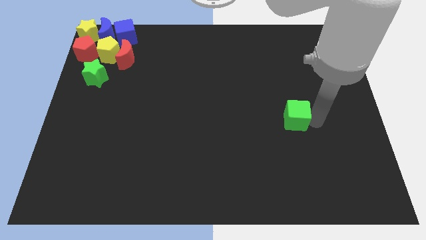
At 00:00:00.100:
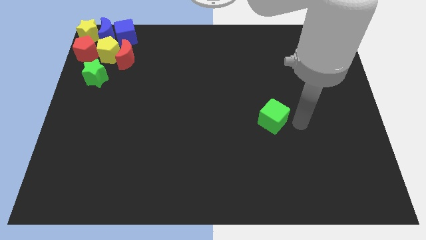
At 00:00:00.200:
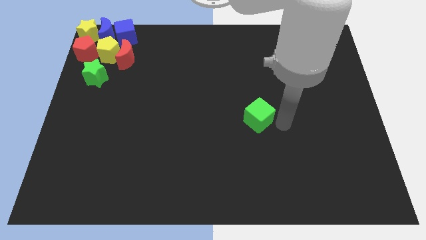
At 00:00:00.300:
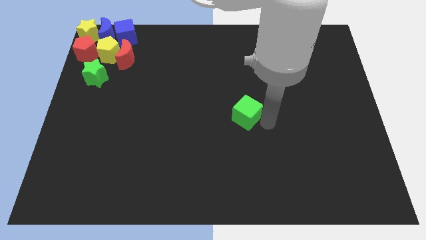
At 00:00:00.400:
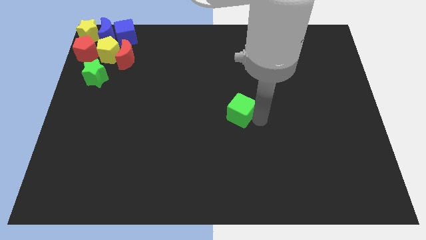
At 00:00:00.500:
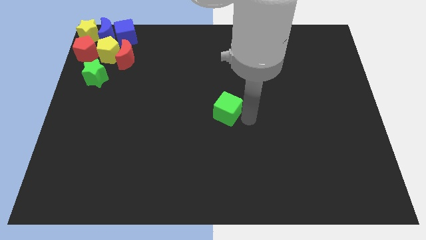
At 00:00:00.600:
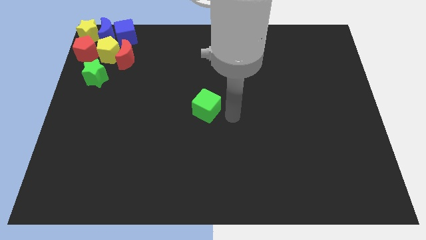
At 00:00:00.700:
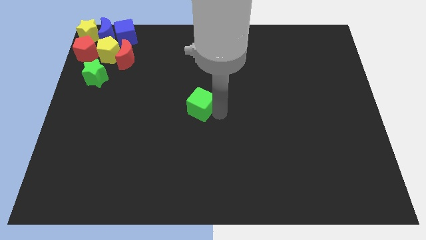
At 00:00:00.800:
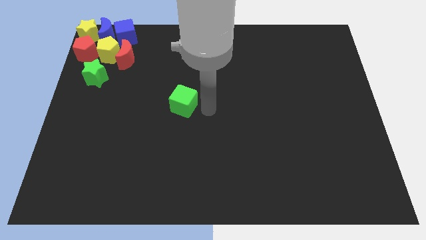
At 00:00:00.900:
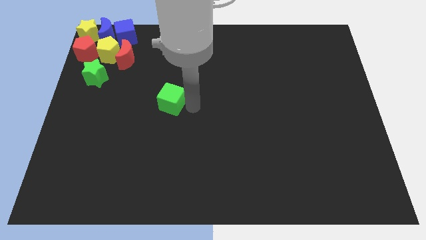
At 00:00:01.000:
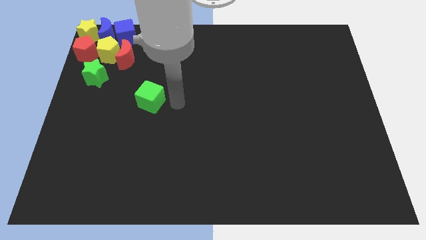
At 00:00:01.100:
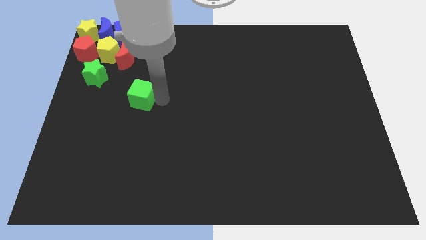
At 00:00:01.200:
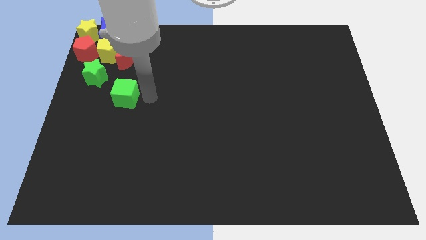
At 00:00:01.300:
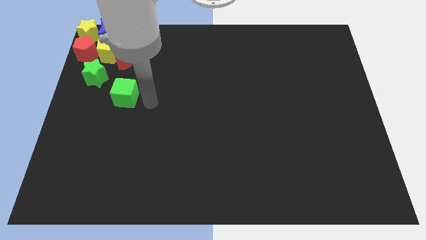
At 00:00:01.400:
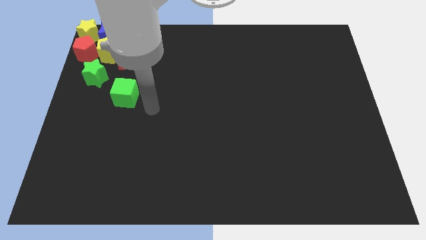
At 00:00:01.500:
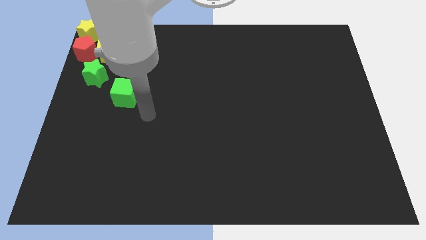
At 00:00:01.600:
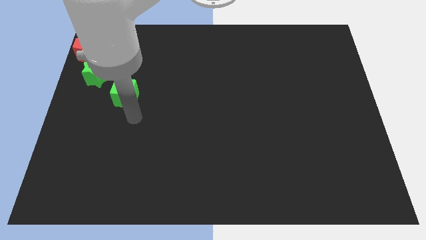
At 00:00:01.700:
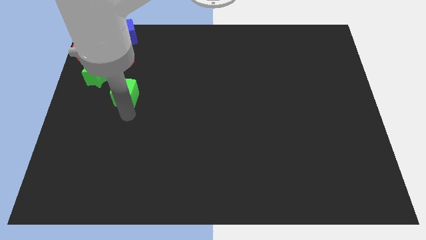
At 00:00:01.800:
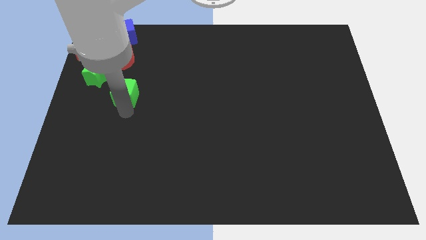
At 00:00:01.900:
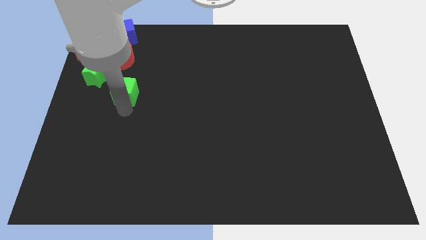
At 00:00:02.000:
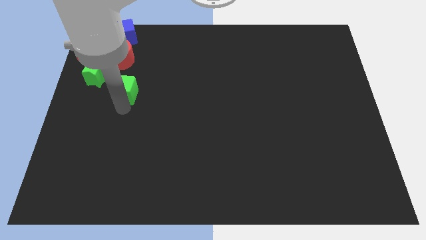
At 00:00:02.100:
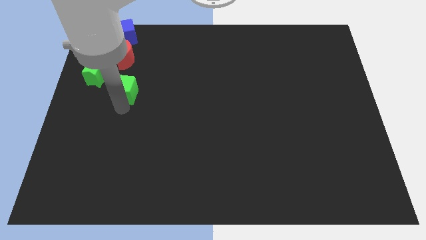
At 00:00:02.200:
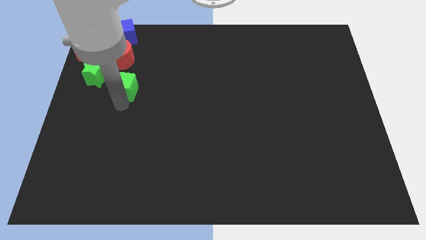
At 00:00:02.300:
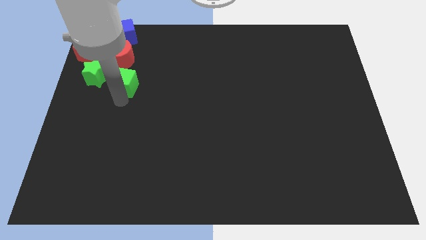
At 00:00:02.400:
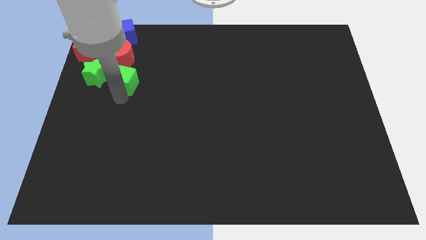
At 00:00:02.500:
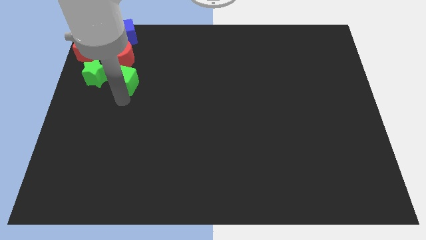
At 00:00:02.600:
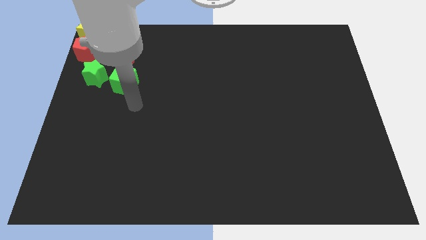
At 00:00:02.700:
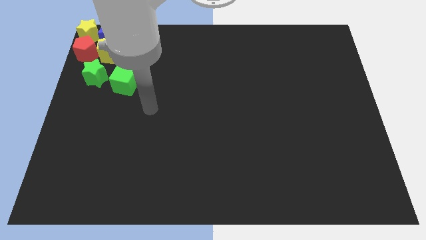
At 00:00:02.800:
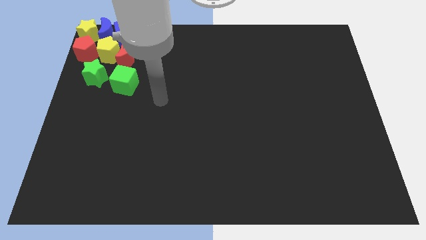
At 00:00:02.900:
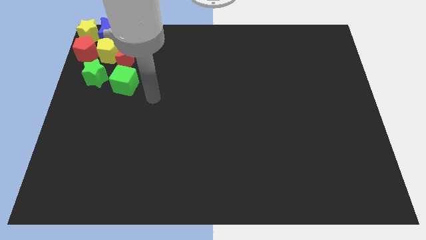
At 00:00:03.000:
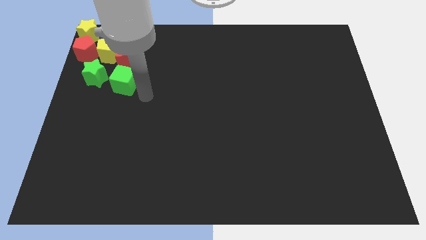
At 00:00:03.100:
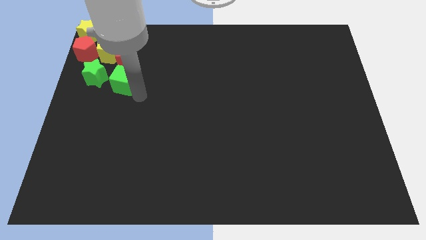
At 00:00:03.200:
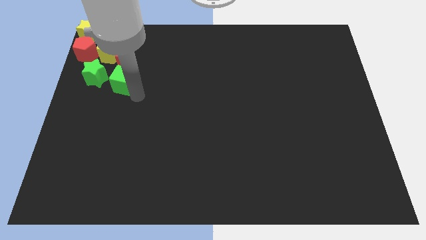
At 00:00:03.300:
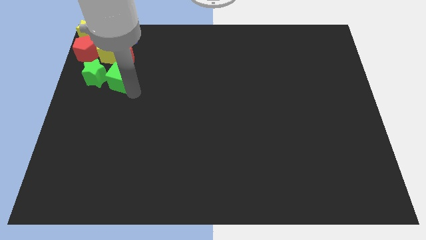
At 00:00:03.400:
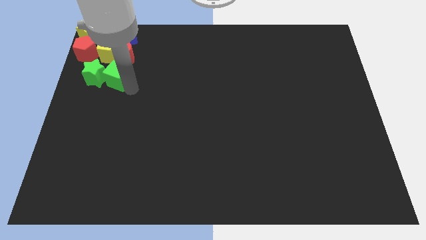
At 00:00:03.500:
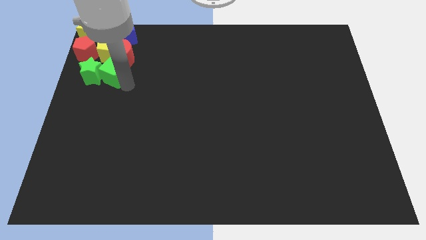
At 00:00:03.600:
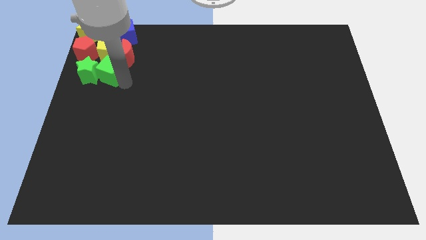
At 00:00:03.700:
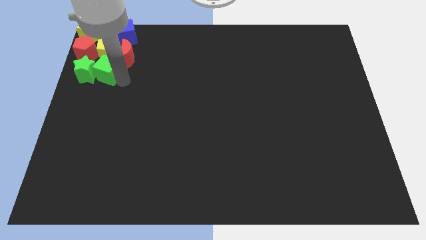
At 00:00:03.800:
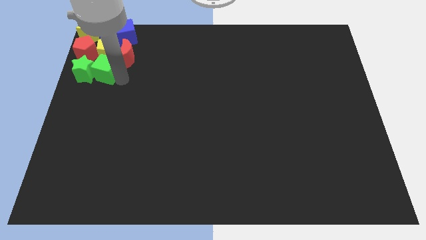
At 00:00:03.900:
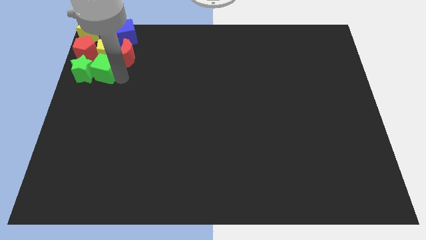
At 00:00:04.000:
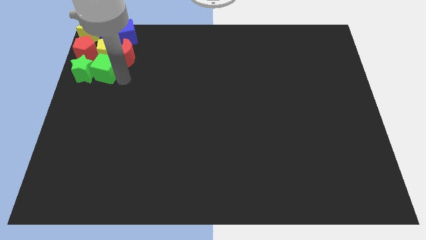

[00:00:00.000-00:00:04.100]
push green cube into green star

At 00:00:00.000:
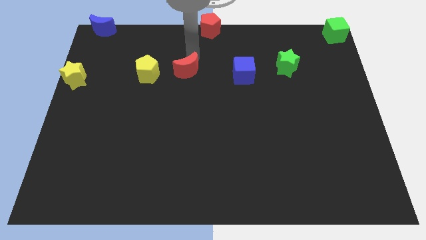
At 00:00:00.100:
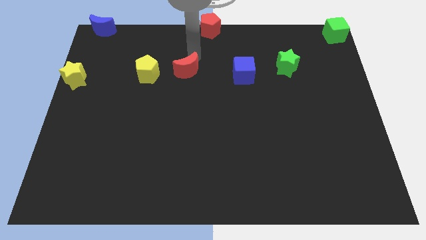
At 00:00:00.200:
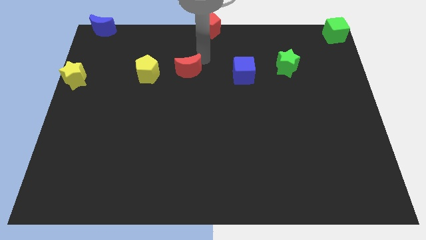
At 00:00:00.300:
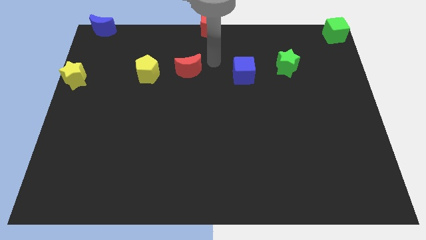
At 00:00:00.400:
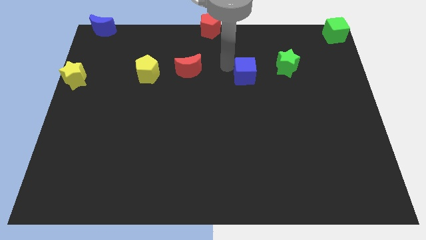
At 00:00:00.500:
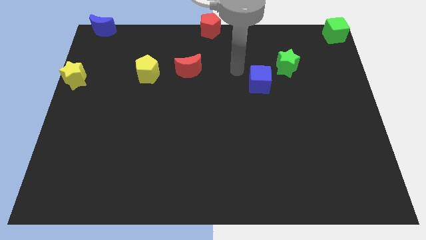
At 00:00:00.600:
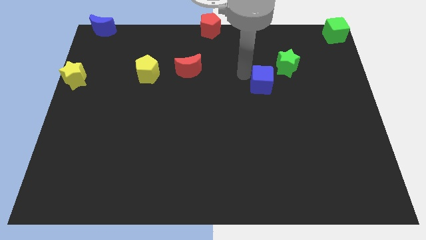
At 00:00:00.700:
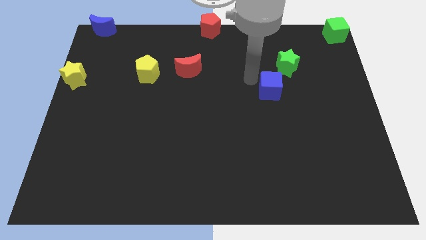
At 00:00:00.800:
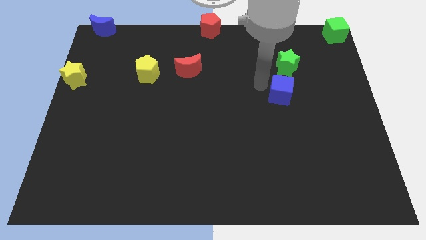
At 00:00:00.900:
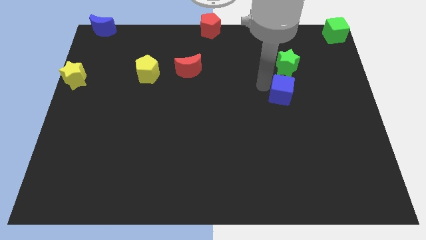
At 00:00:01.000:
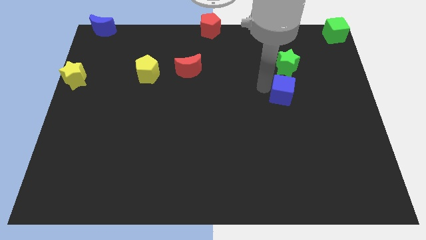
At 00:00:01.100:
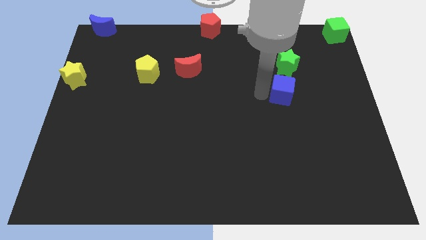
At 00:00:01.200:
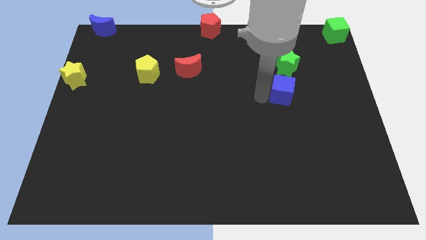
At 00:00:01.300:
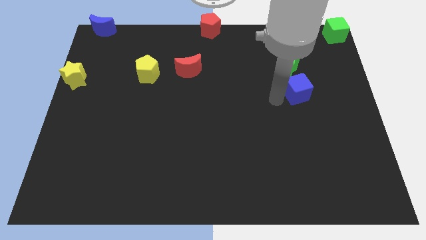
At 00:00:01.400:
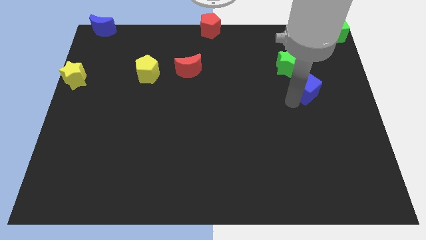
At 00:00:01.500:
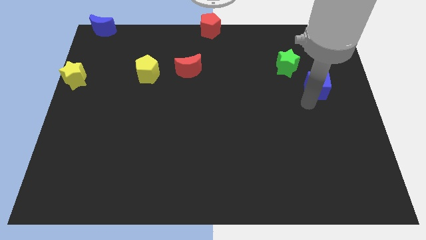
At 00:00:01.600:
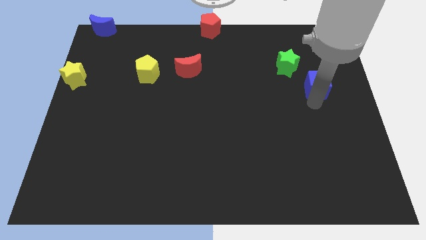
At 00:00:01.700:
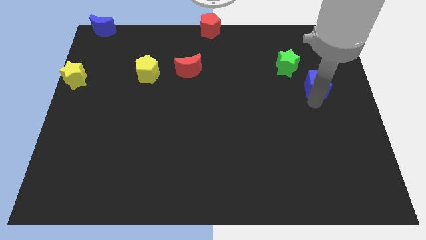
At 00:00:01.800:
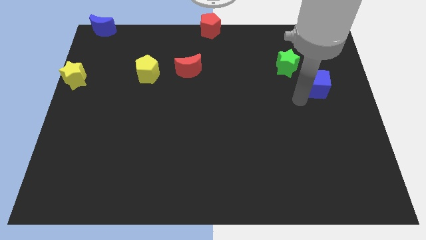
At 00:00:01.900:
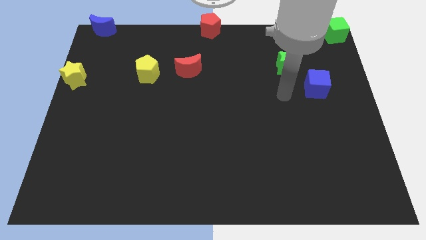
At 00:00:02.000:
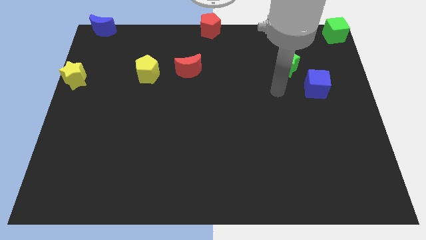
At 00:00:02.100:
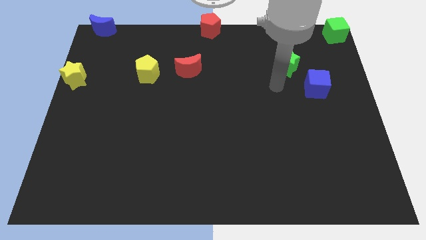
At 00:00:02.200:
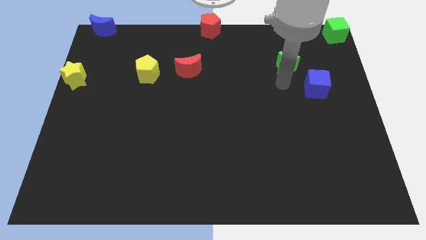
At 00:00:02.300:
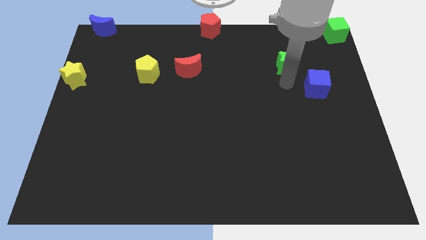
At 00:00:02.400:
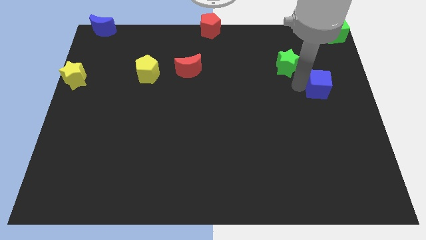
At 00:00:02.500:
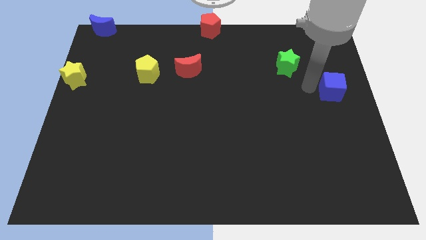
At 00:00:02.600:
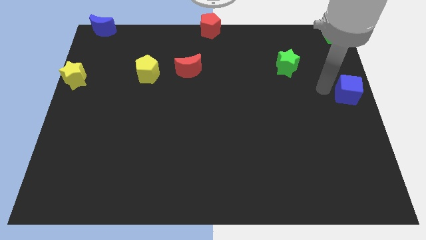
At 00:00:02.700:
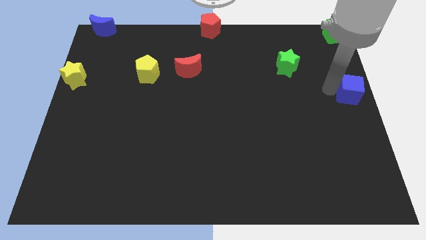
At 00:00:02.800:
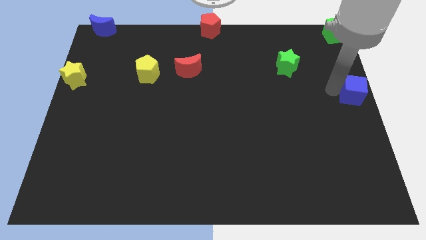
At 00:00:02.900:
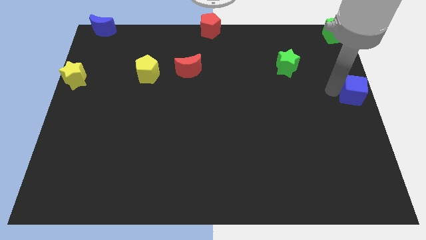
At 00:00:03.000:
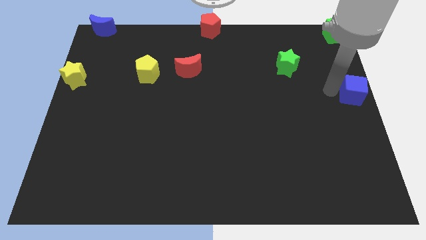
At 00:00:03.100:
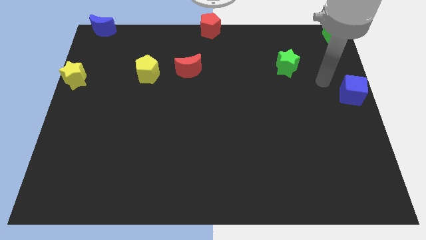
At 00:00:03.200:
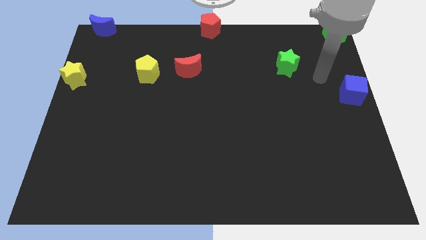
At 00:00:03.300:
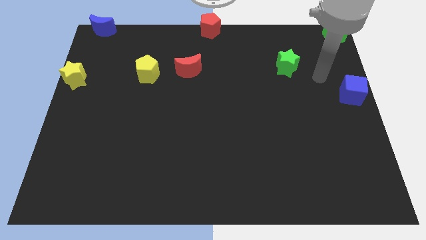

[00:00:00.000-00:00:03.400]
push the blue cube vertically below the green cube

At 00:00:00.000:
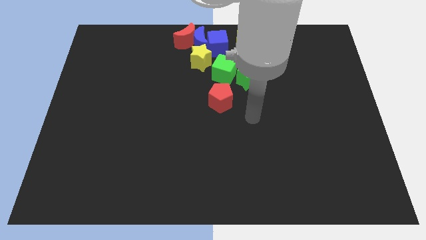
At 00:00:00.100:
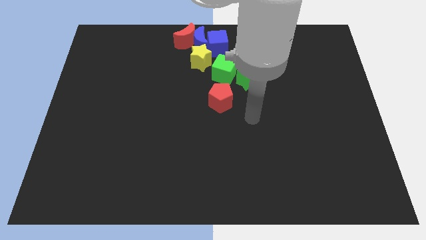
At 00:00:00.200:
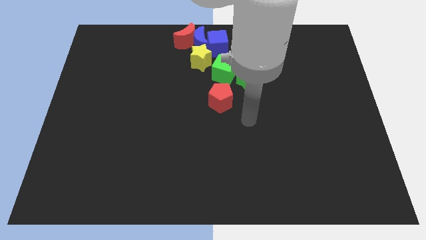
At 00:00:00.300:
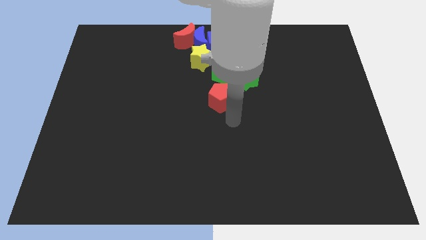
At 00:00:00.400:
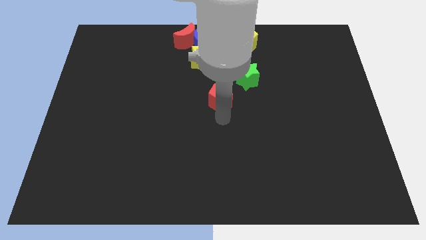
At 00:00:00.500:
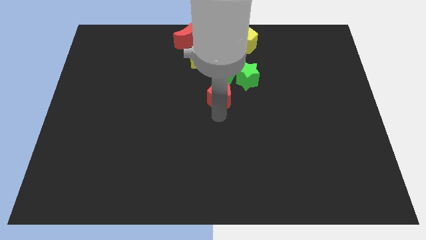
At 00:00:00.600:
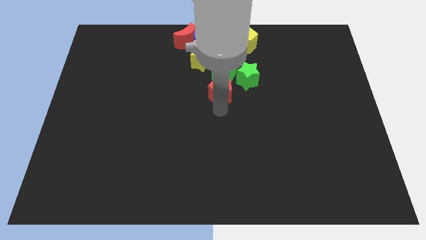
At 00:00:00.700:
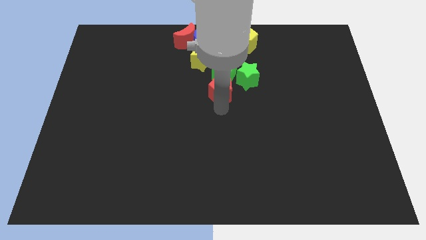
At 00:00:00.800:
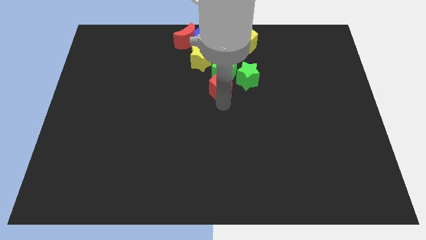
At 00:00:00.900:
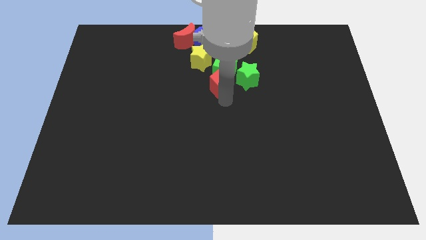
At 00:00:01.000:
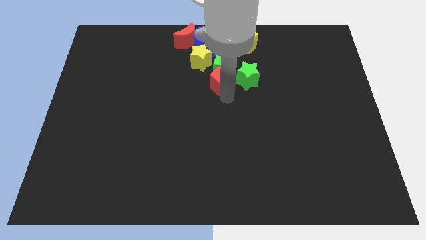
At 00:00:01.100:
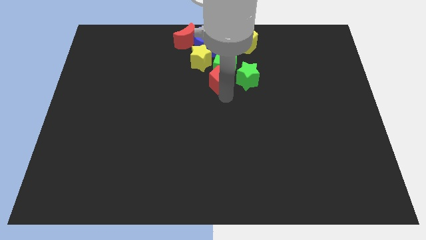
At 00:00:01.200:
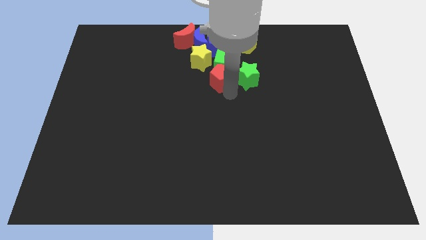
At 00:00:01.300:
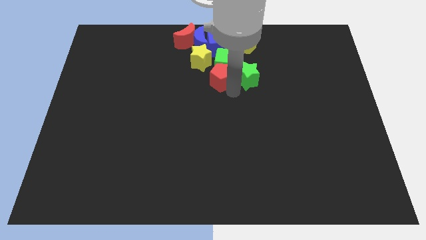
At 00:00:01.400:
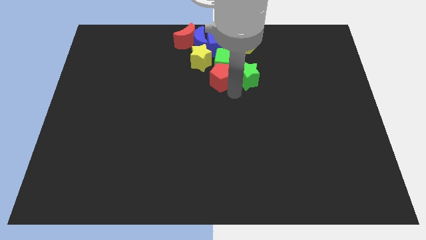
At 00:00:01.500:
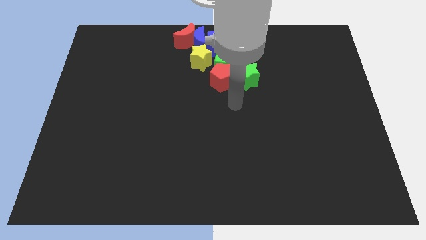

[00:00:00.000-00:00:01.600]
move the red pentagon into the green cube
